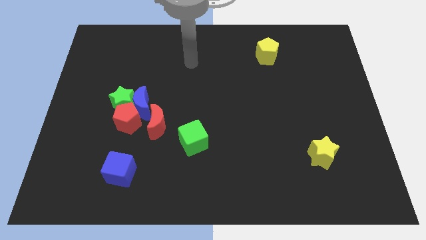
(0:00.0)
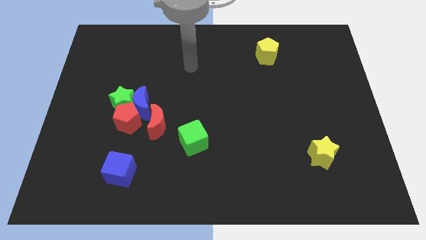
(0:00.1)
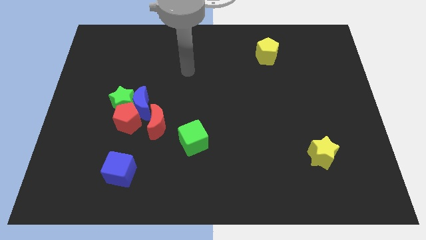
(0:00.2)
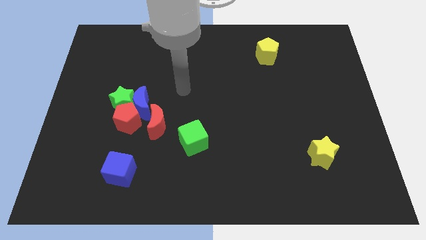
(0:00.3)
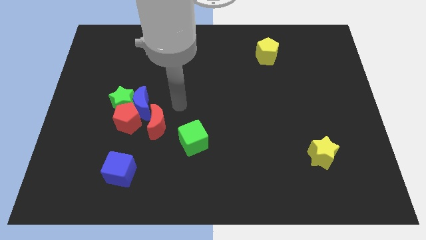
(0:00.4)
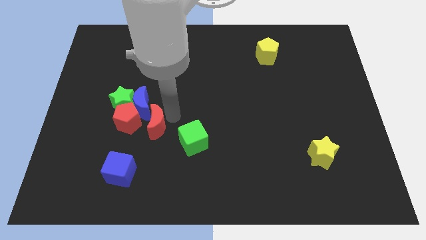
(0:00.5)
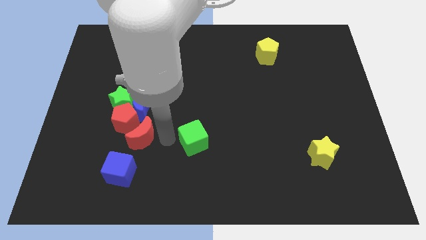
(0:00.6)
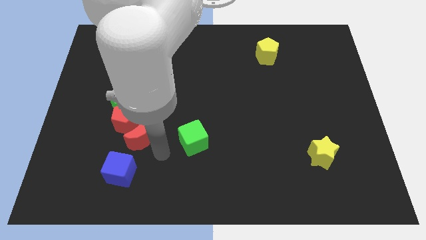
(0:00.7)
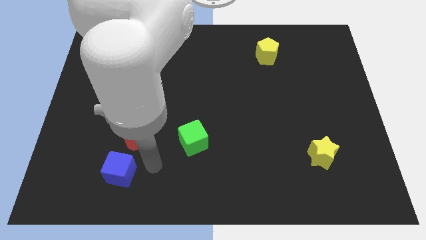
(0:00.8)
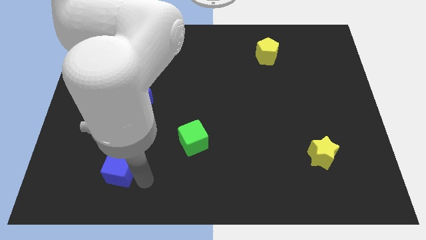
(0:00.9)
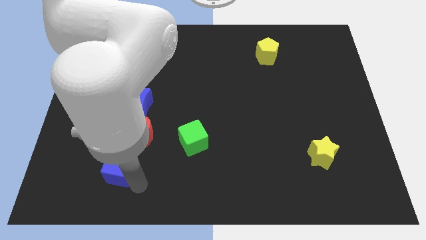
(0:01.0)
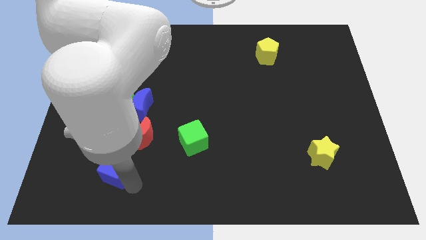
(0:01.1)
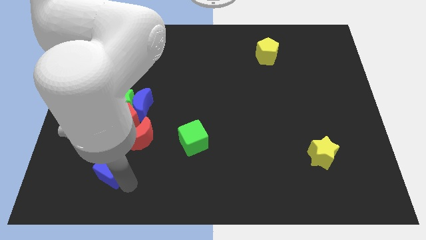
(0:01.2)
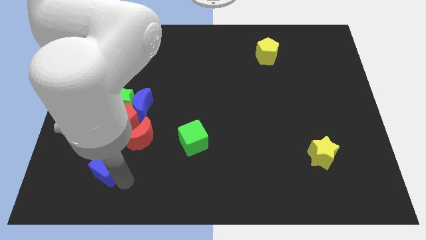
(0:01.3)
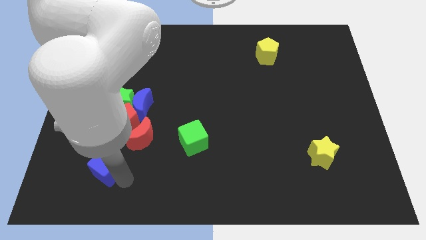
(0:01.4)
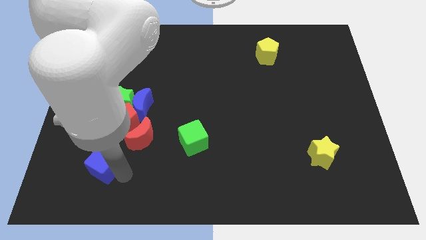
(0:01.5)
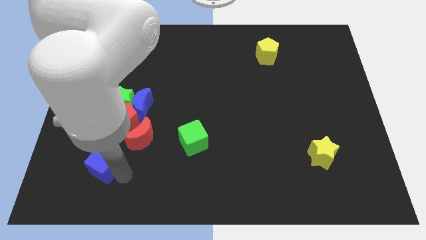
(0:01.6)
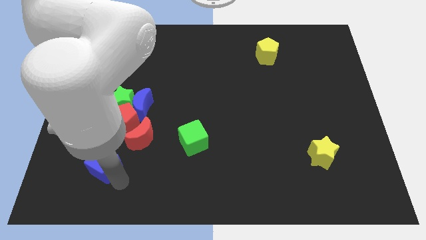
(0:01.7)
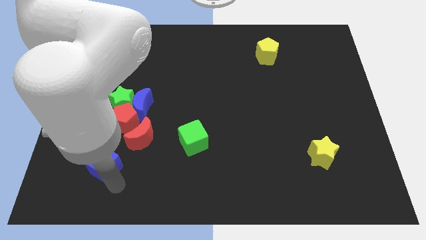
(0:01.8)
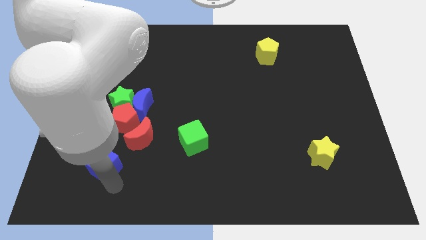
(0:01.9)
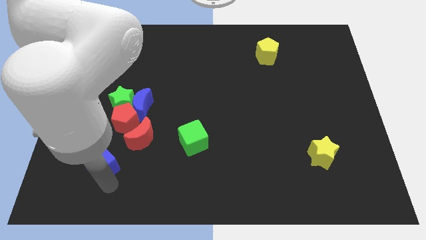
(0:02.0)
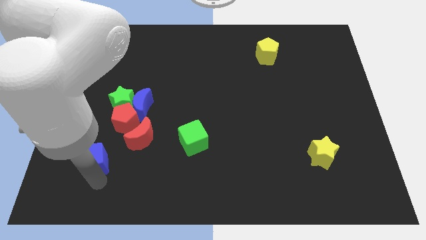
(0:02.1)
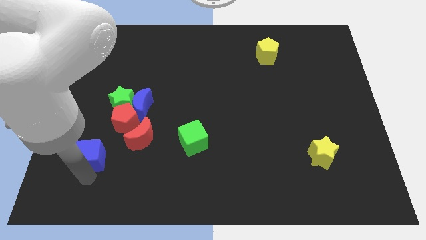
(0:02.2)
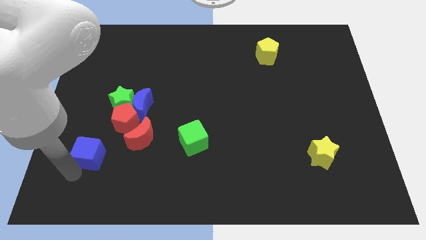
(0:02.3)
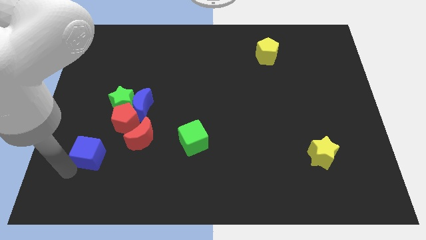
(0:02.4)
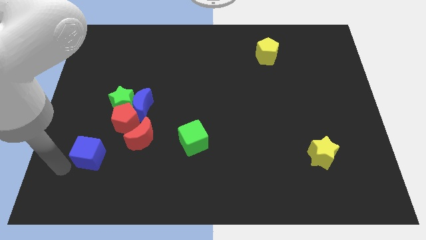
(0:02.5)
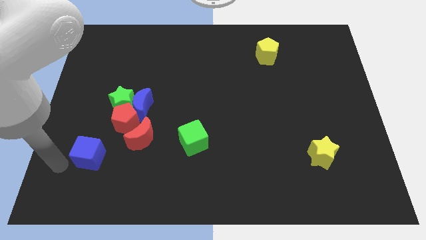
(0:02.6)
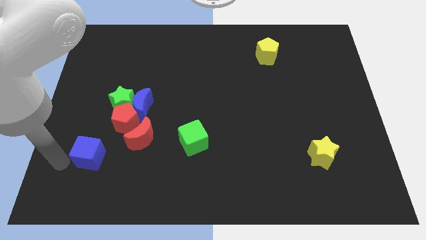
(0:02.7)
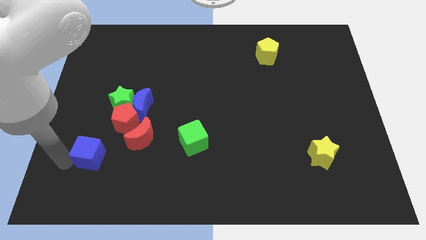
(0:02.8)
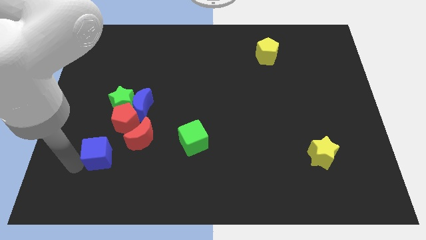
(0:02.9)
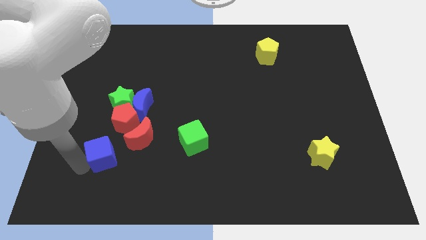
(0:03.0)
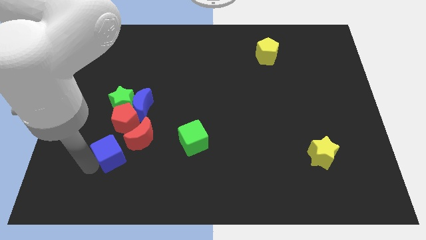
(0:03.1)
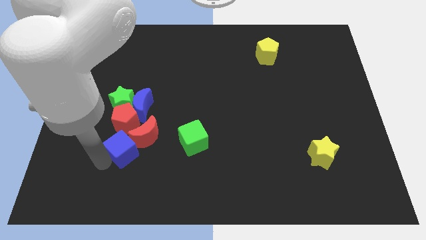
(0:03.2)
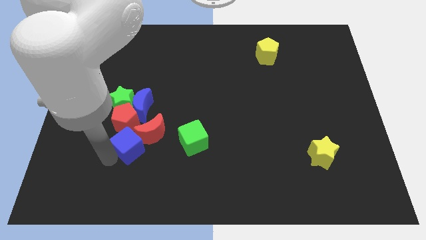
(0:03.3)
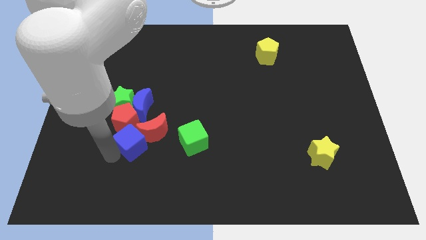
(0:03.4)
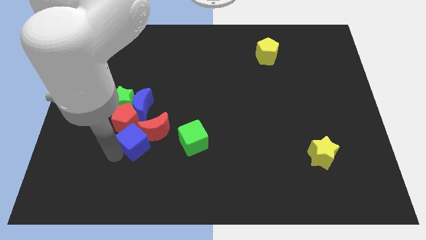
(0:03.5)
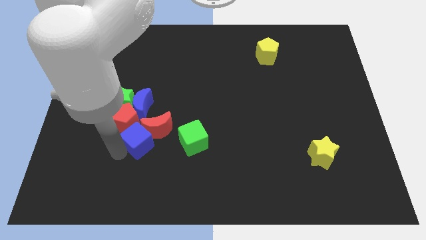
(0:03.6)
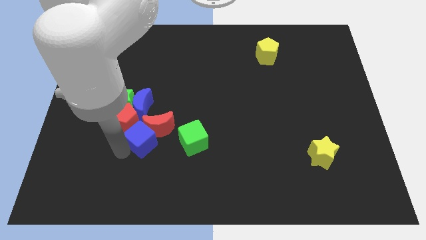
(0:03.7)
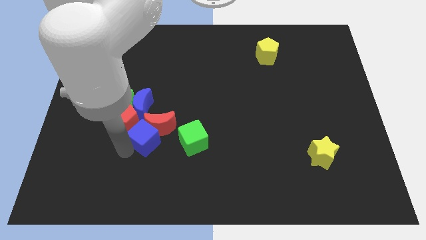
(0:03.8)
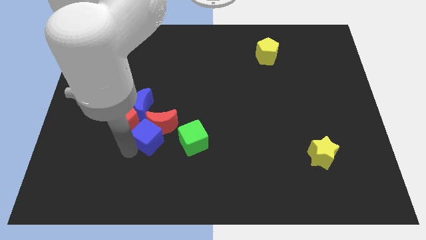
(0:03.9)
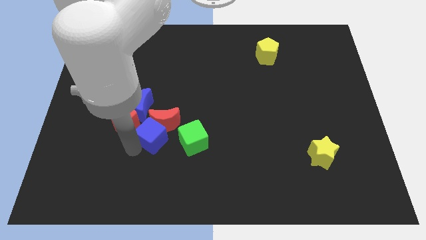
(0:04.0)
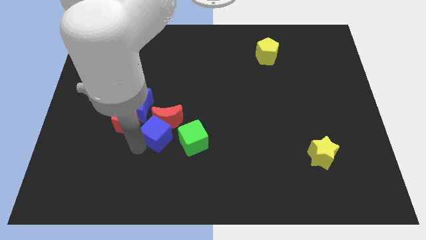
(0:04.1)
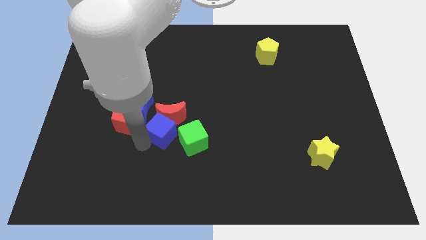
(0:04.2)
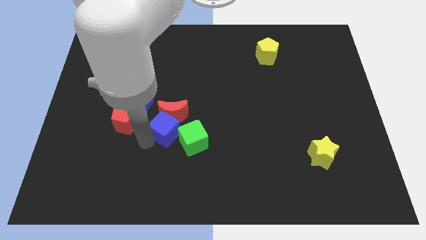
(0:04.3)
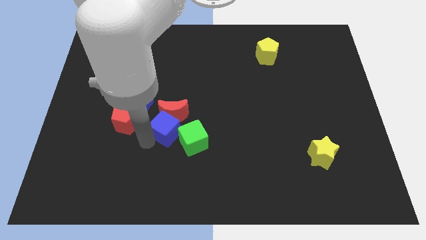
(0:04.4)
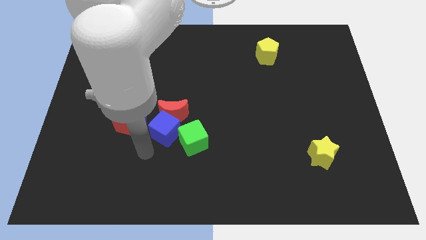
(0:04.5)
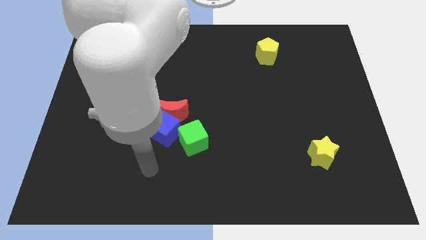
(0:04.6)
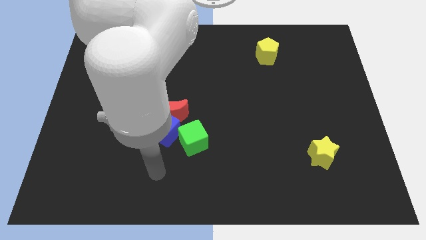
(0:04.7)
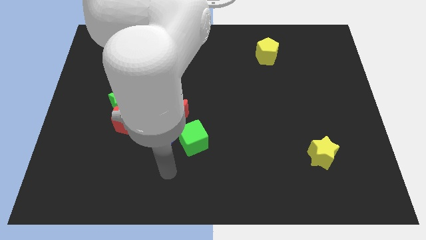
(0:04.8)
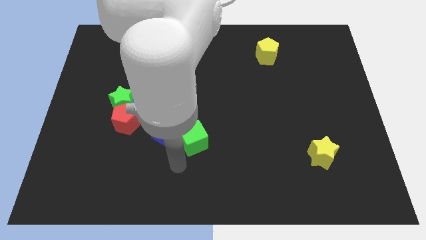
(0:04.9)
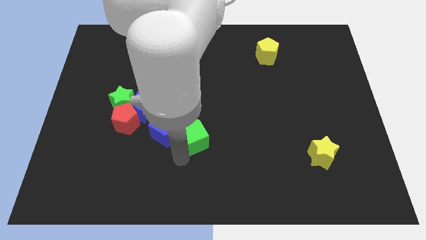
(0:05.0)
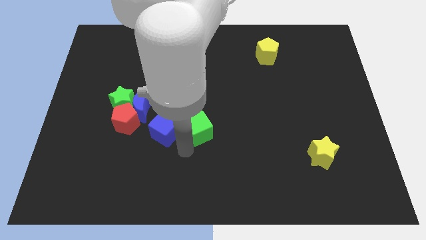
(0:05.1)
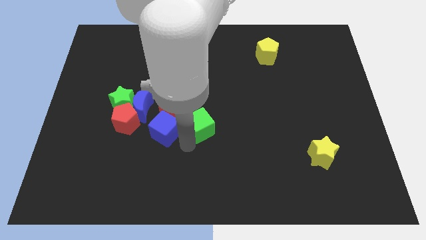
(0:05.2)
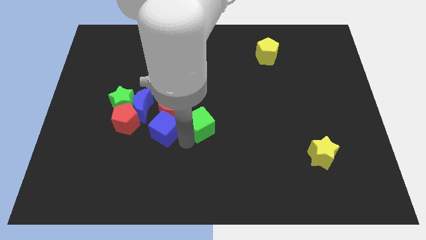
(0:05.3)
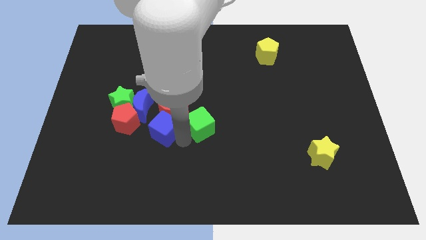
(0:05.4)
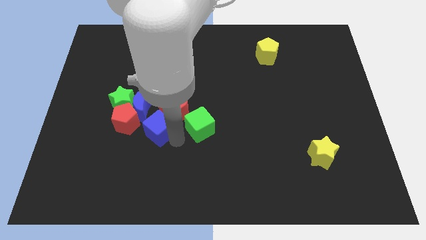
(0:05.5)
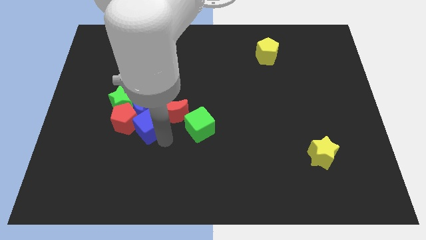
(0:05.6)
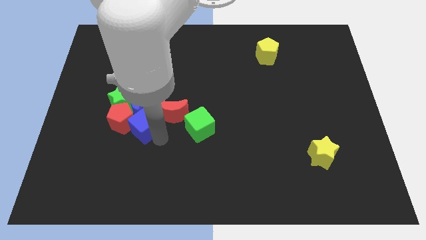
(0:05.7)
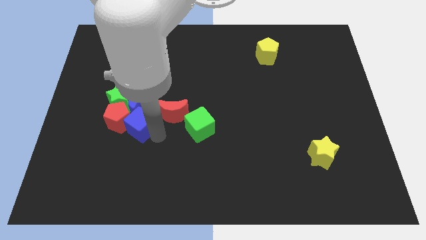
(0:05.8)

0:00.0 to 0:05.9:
move the blue cube next to the blue moon

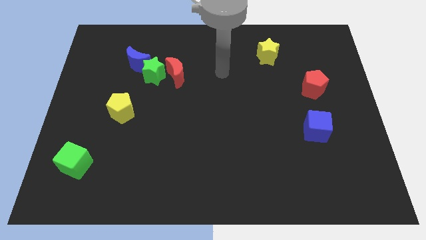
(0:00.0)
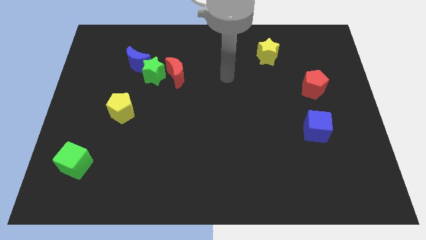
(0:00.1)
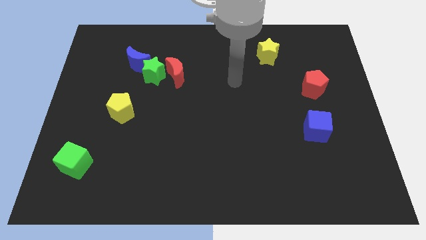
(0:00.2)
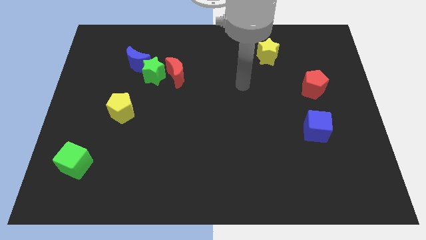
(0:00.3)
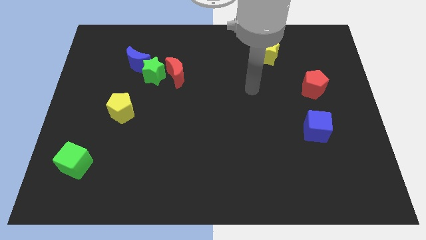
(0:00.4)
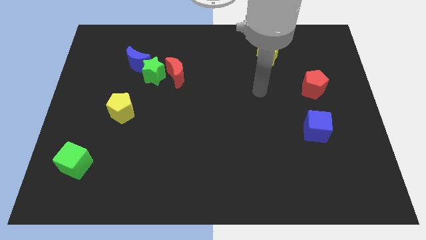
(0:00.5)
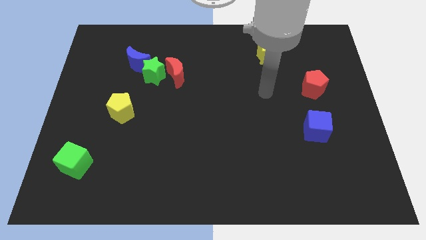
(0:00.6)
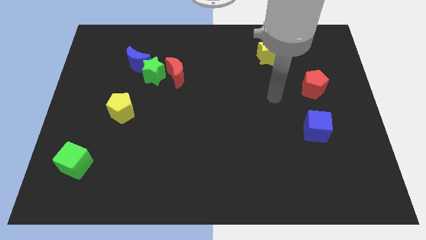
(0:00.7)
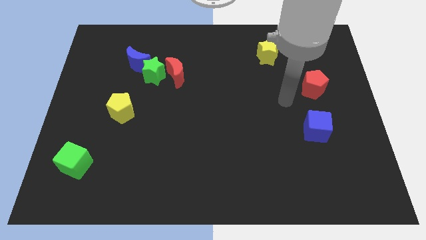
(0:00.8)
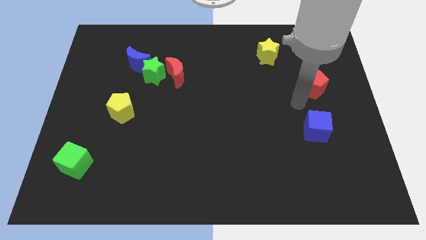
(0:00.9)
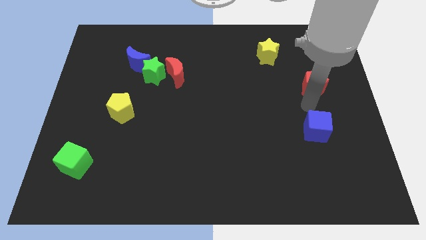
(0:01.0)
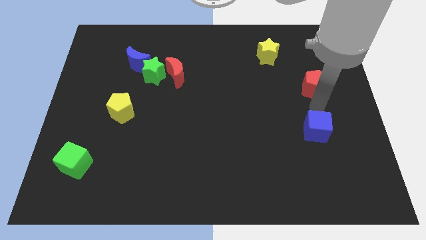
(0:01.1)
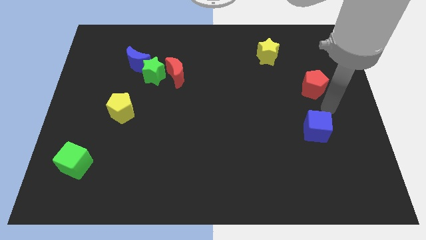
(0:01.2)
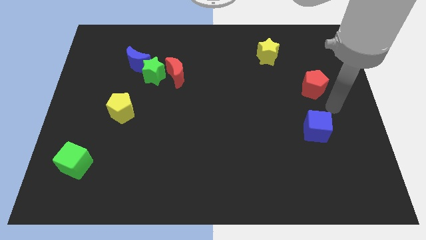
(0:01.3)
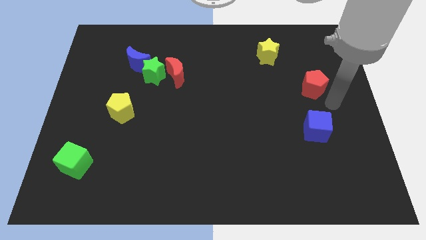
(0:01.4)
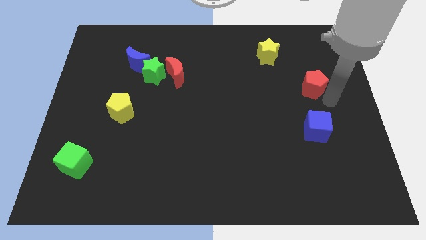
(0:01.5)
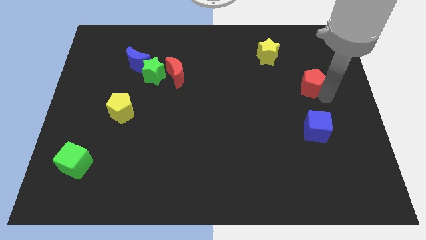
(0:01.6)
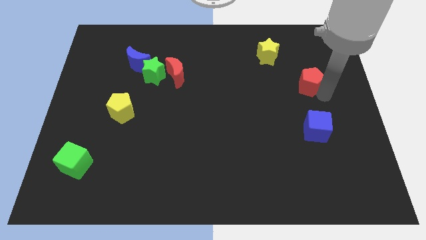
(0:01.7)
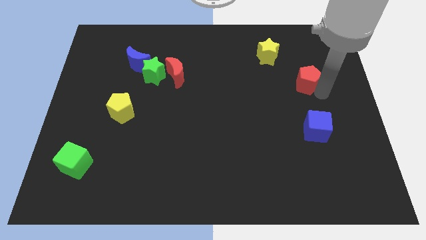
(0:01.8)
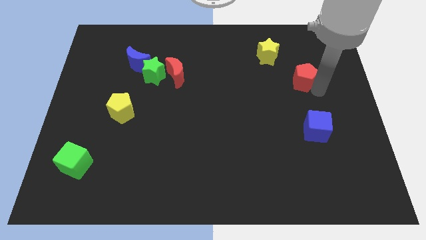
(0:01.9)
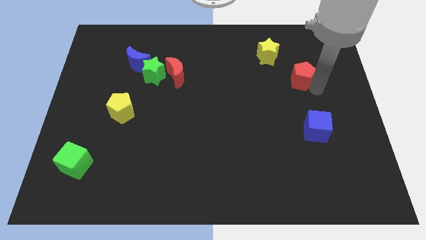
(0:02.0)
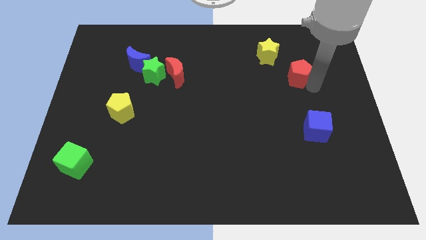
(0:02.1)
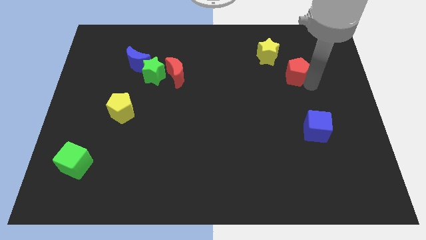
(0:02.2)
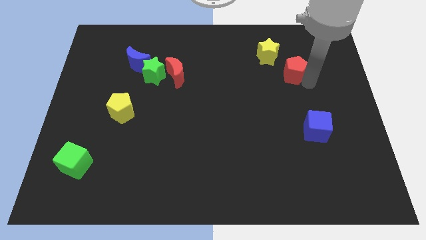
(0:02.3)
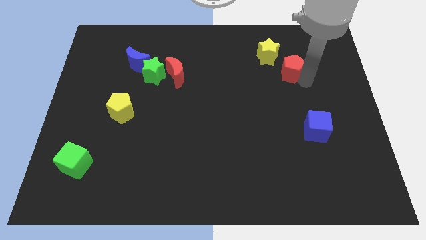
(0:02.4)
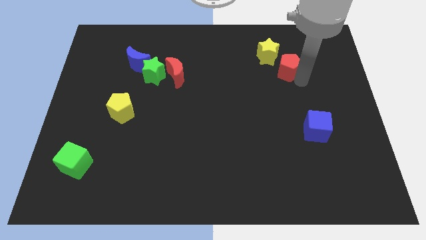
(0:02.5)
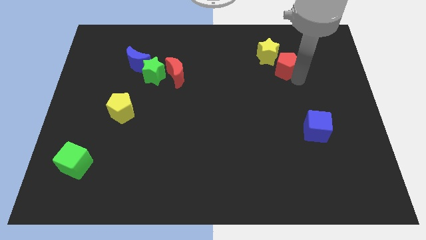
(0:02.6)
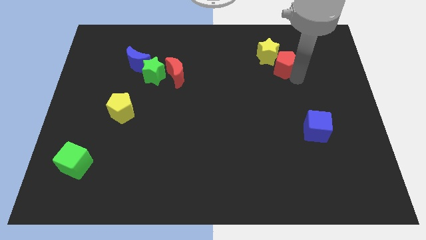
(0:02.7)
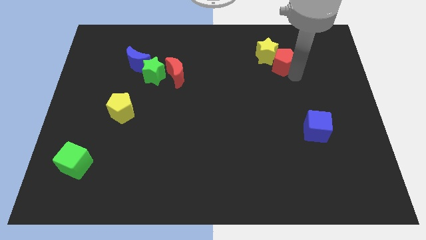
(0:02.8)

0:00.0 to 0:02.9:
push the red pentagon close to the yellow star
